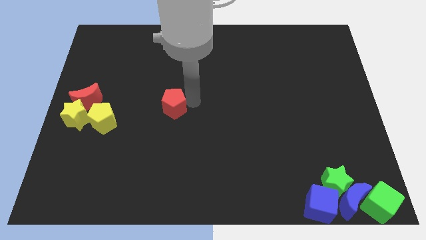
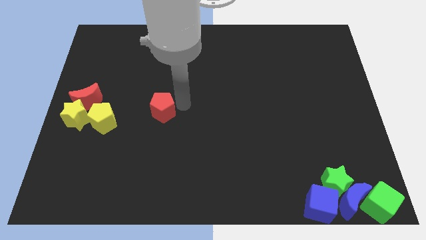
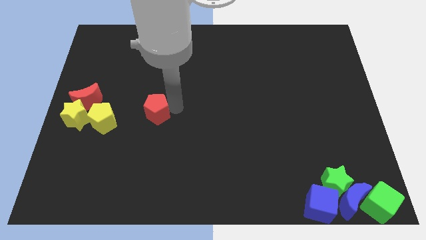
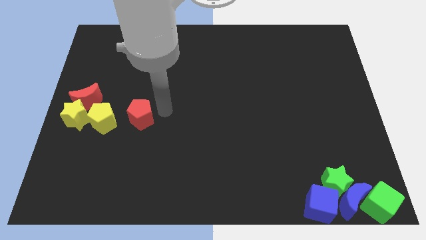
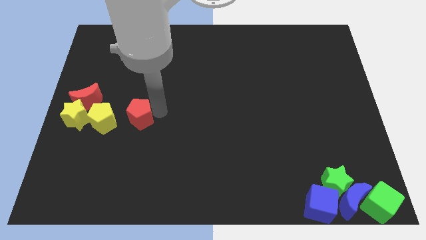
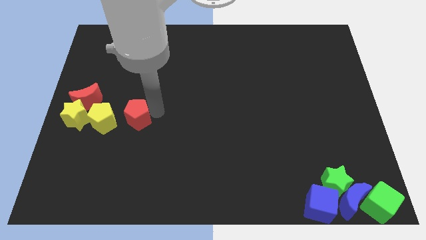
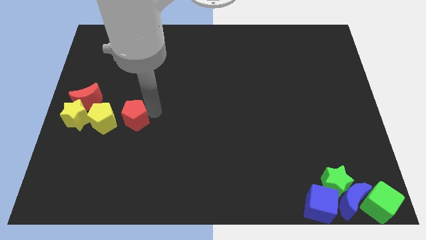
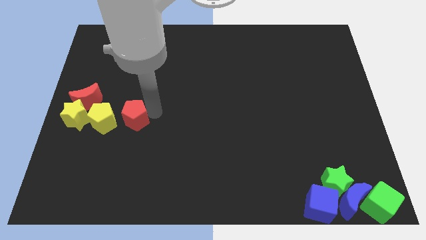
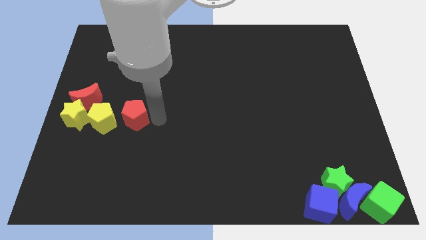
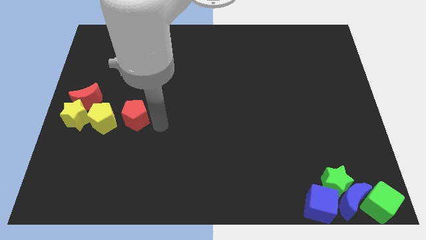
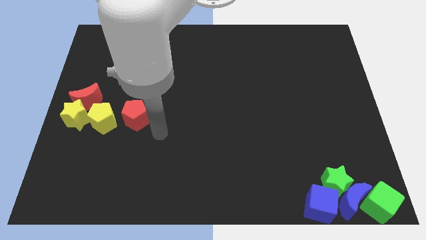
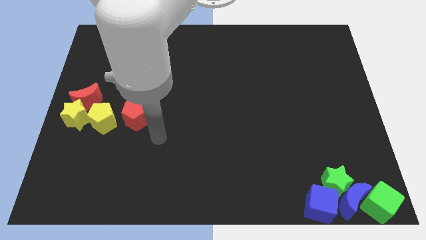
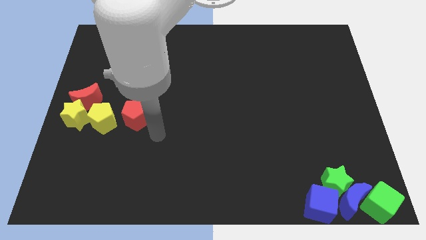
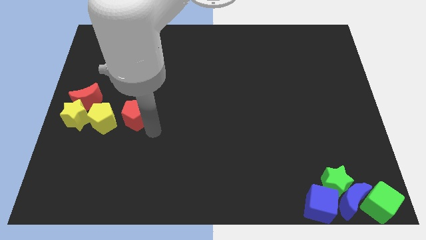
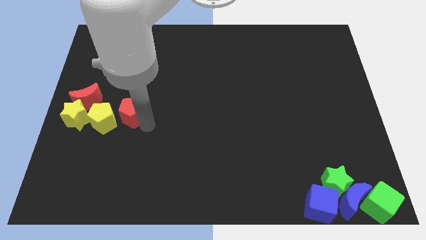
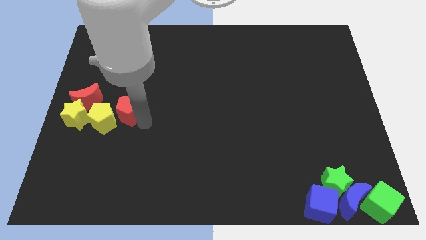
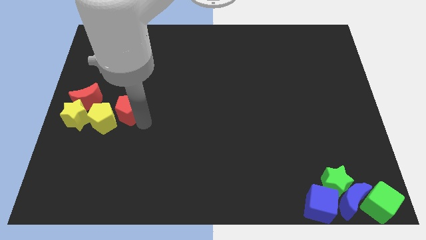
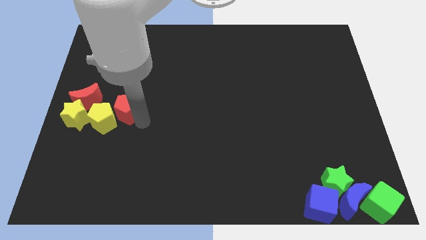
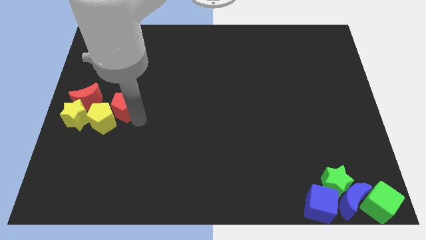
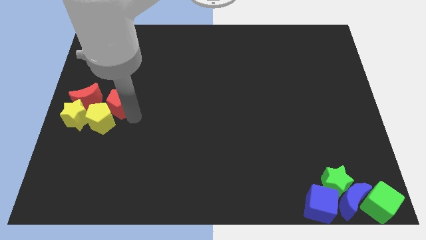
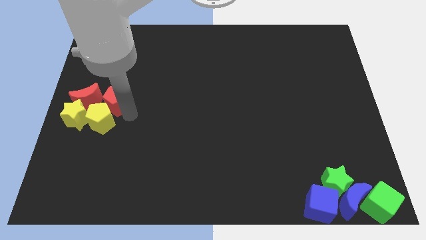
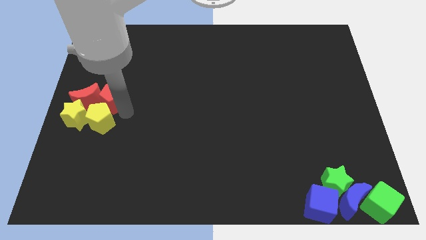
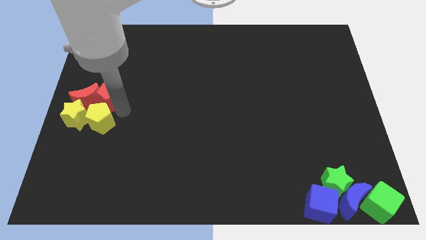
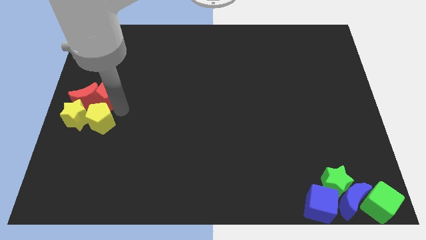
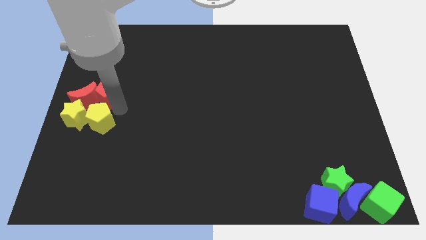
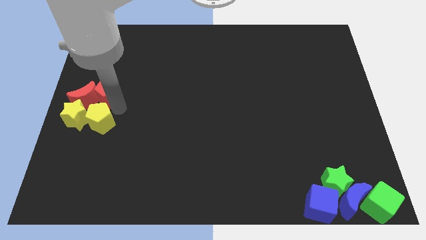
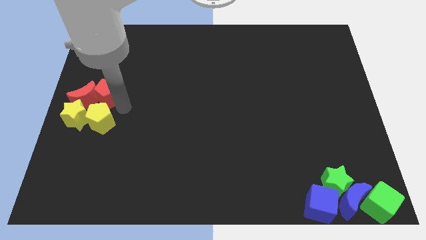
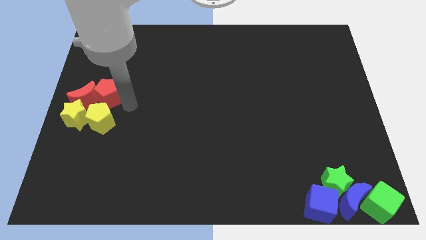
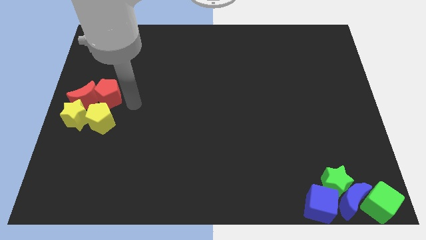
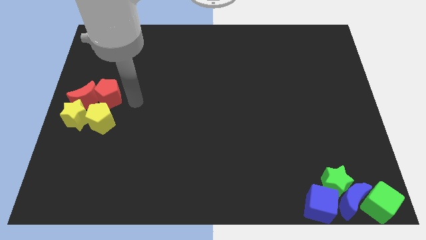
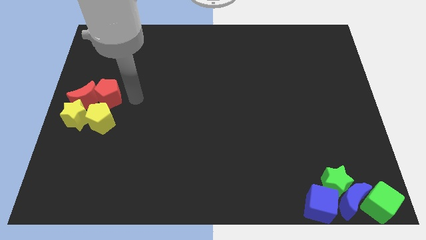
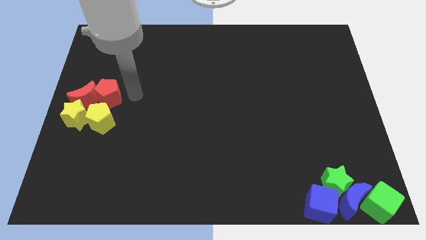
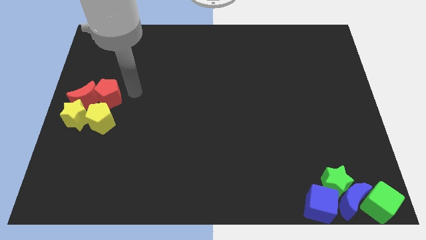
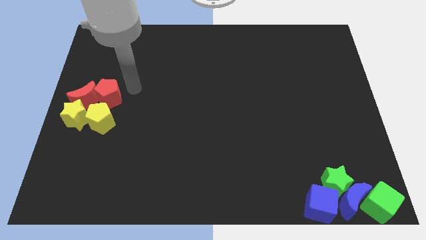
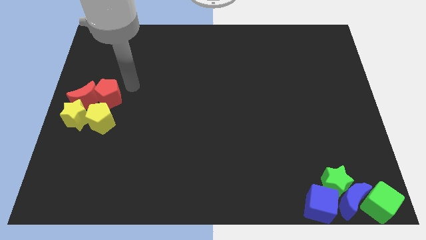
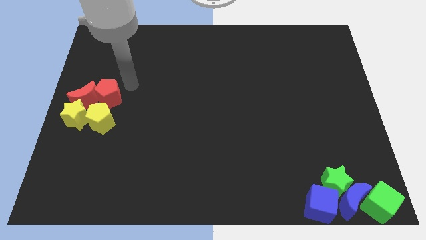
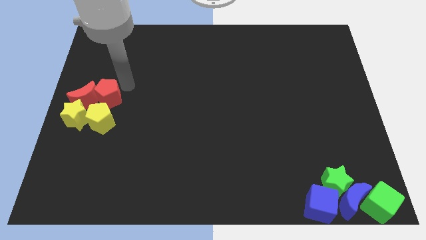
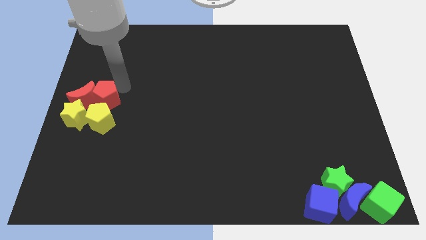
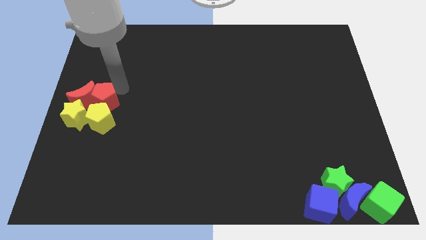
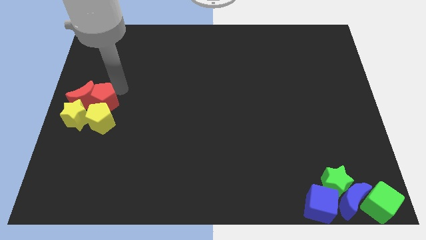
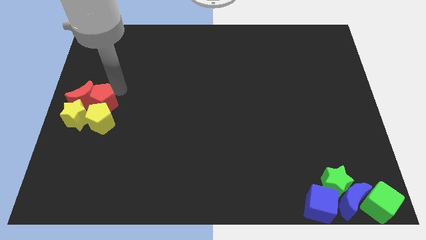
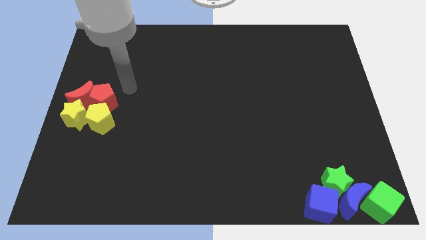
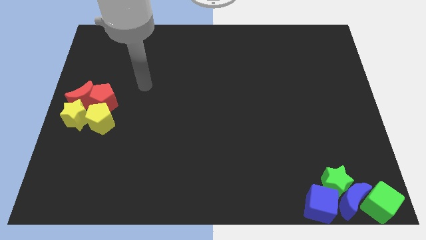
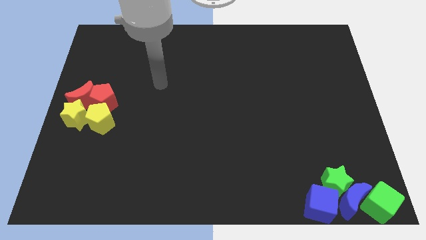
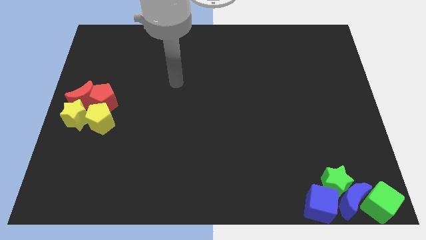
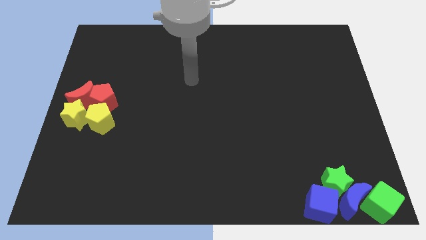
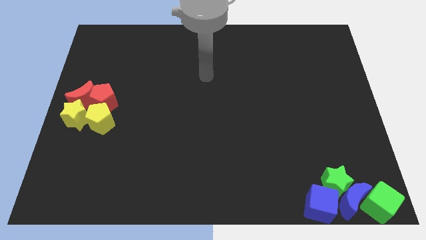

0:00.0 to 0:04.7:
move the red pentagon into the group of blocks

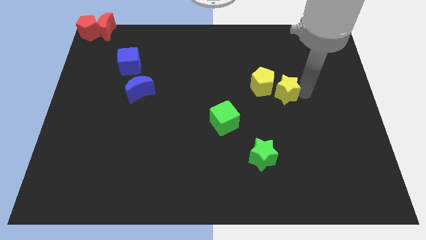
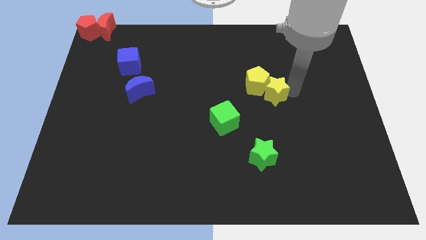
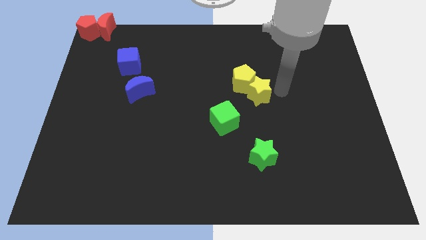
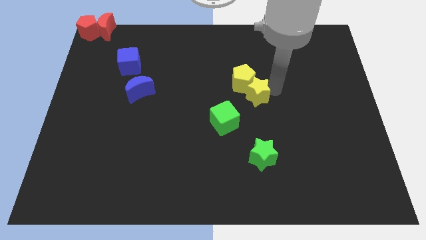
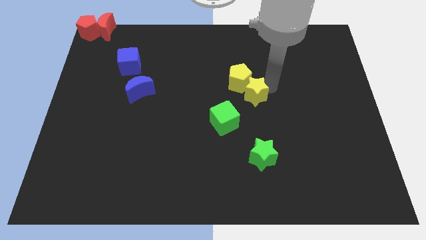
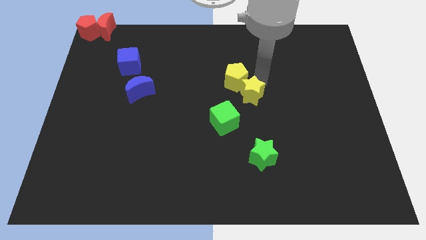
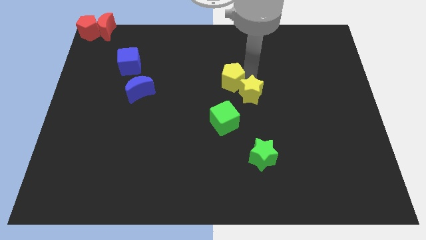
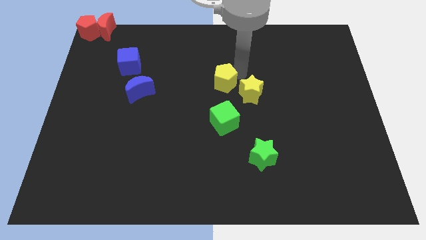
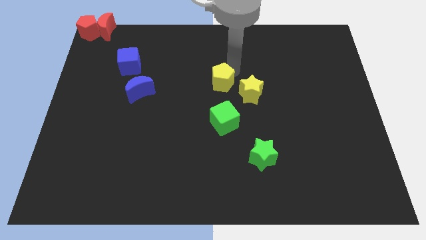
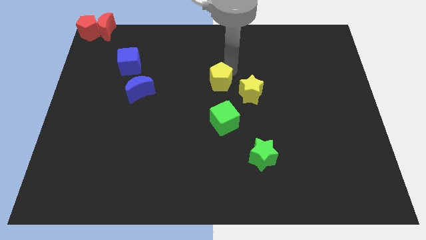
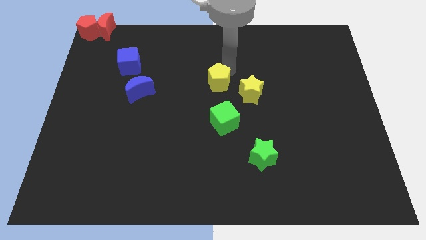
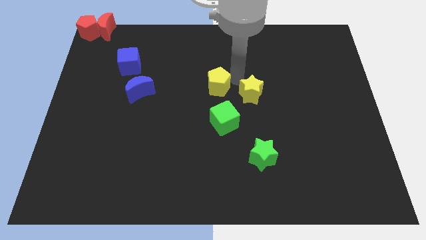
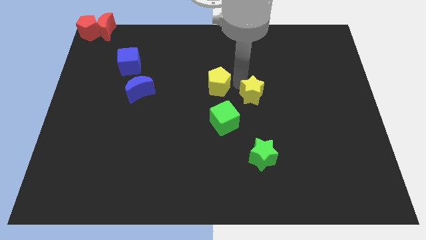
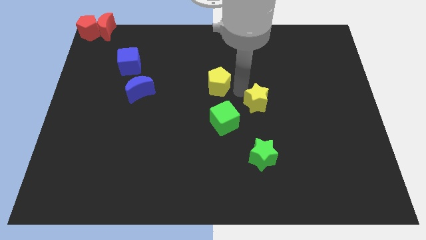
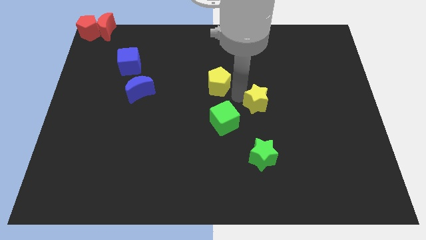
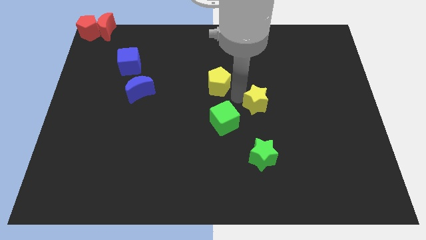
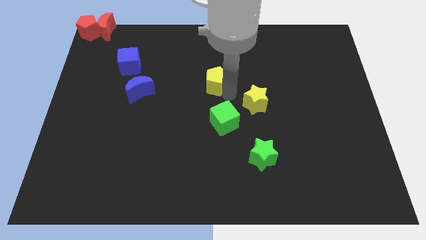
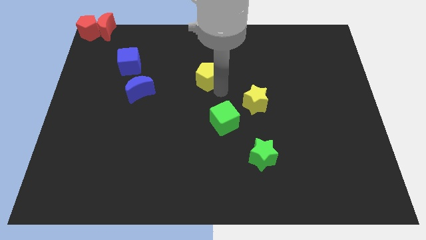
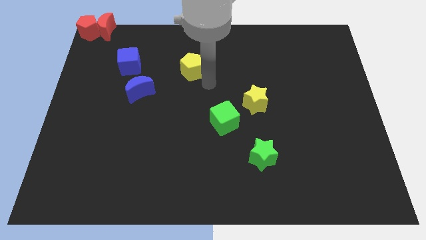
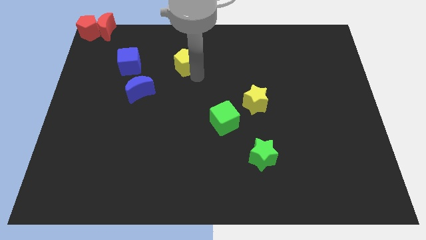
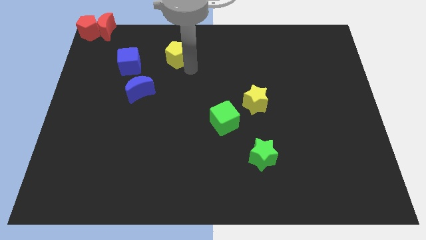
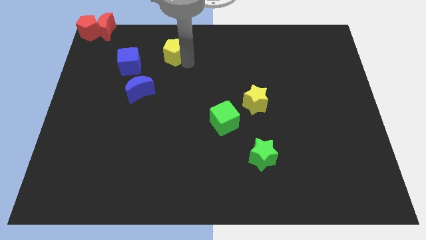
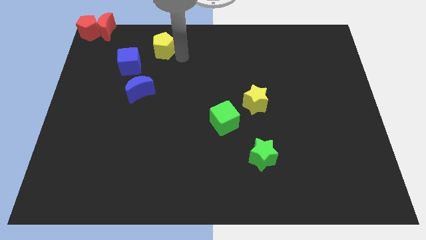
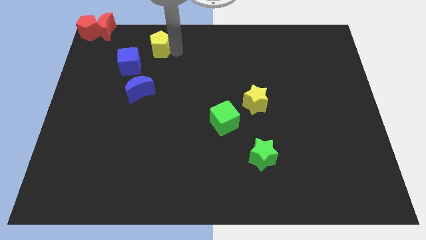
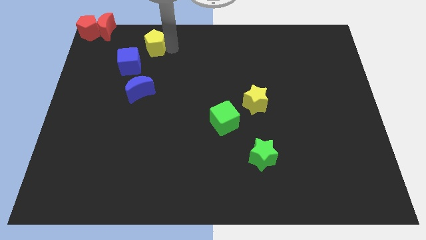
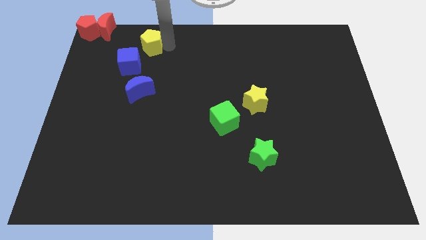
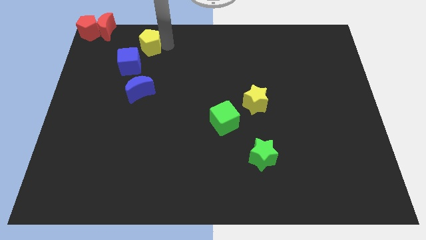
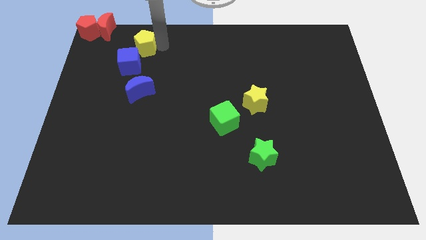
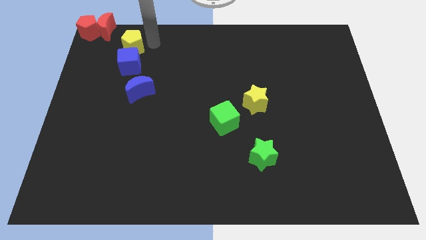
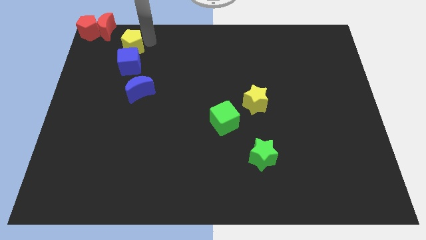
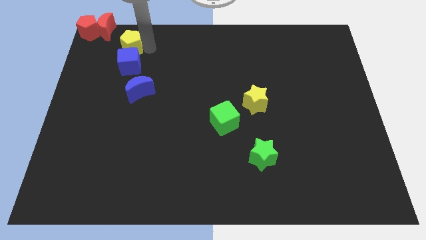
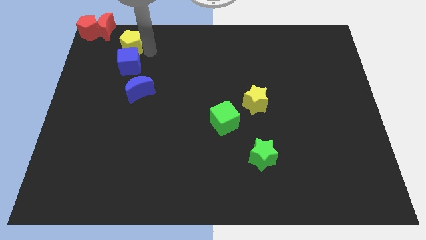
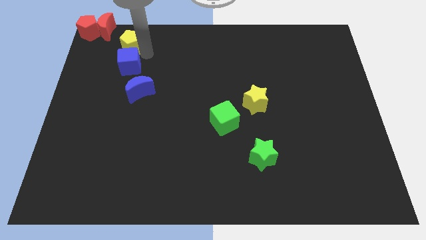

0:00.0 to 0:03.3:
put the yellow pentagon to the top side of the blue cube

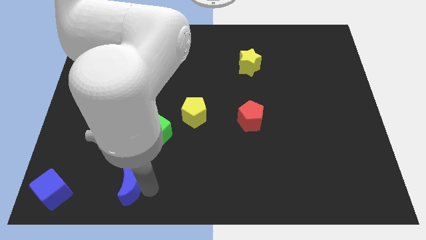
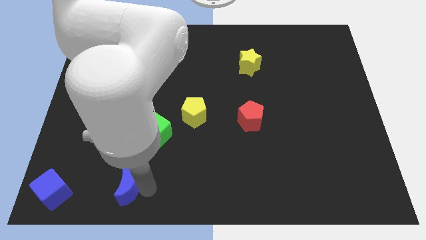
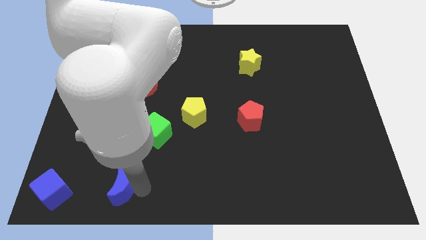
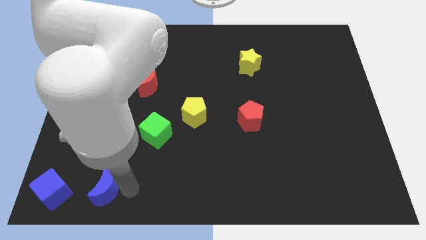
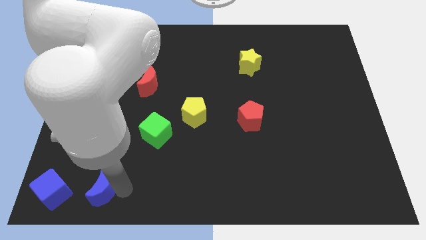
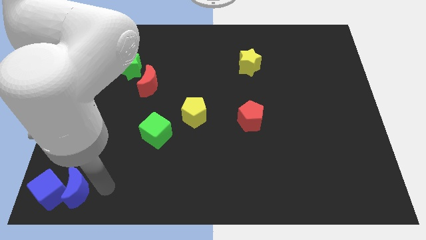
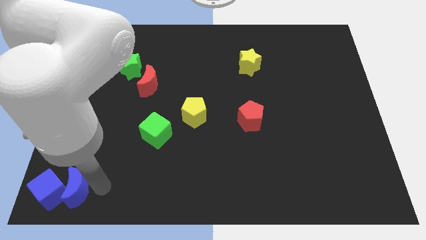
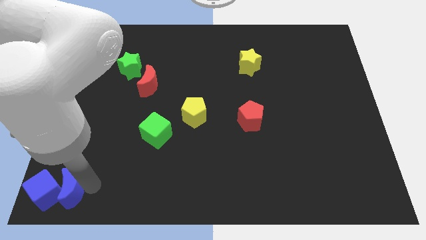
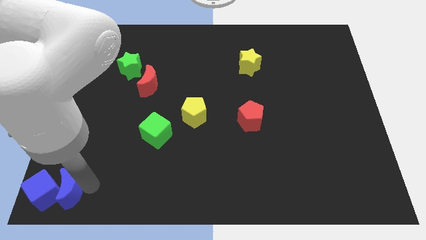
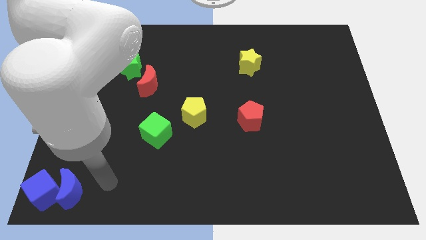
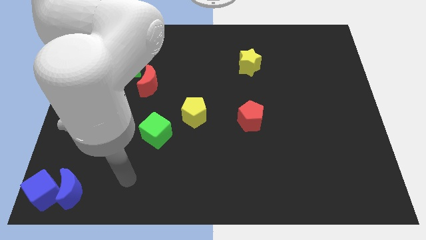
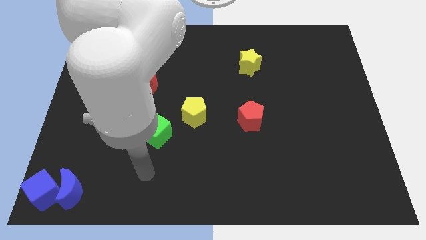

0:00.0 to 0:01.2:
push the blue moon into the blue cube to the bottom left corner of the board
